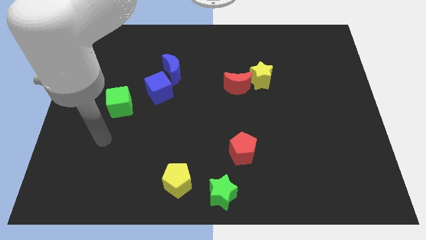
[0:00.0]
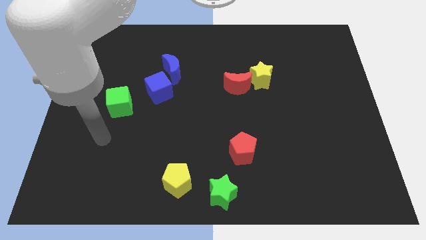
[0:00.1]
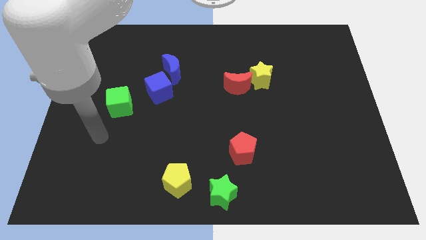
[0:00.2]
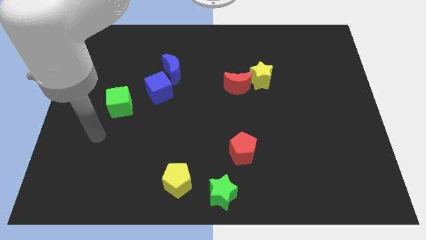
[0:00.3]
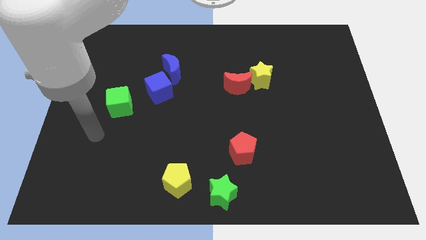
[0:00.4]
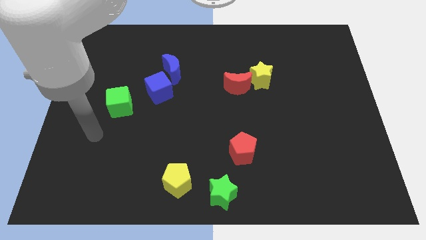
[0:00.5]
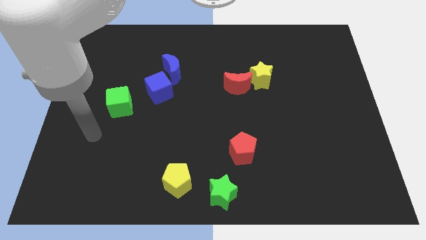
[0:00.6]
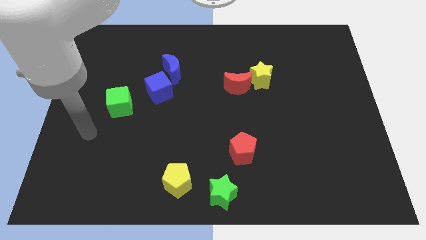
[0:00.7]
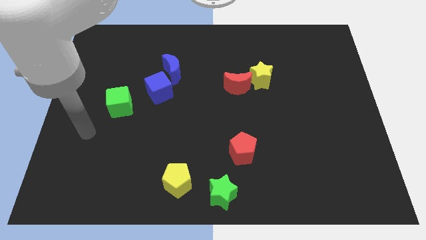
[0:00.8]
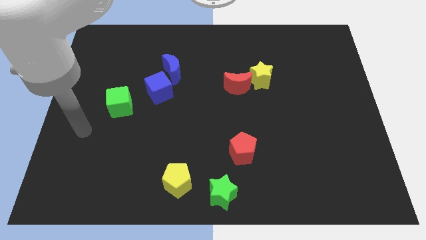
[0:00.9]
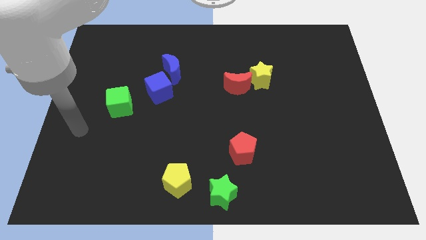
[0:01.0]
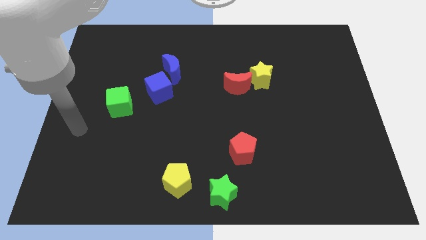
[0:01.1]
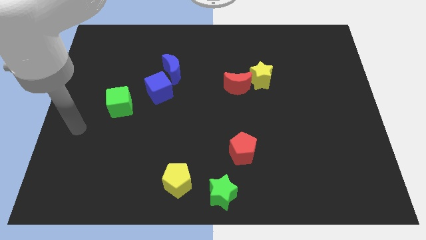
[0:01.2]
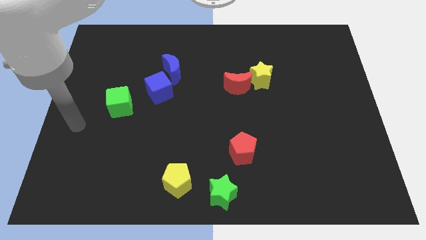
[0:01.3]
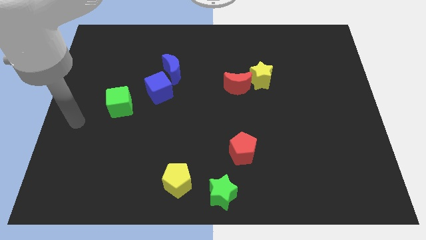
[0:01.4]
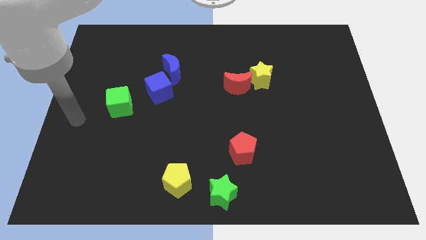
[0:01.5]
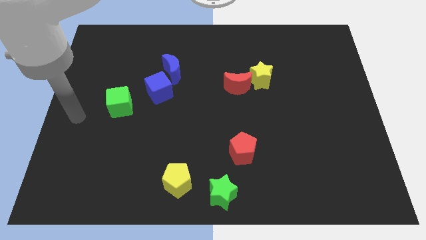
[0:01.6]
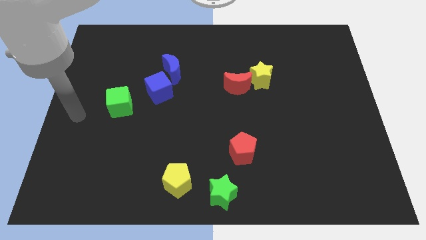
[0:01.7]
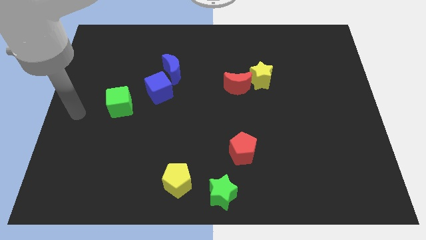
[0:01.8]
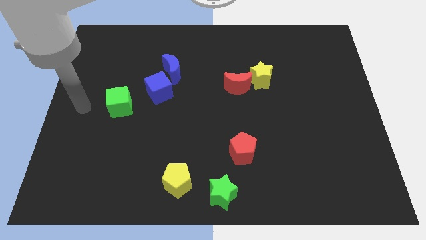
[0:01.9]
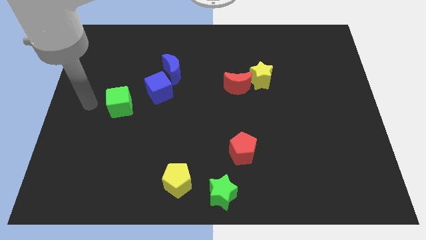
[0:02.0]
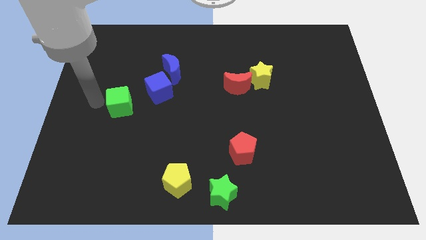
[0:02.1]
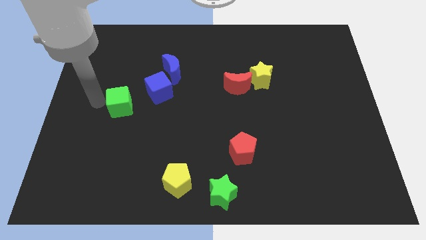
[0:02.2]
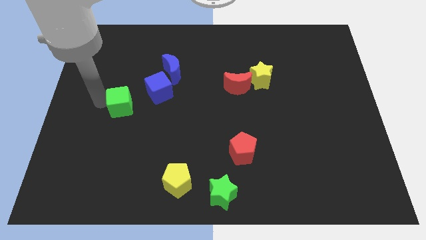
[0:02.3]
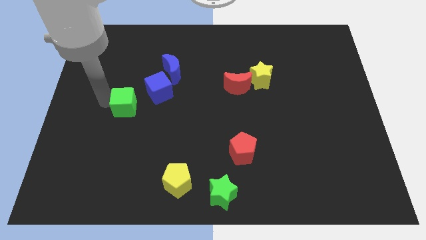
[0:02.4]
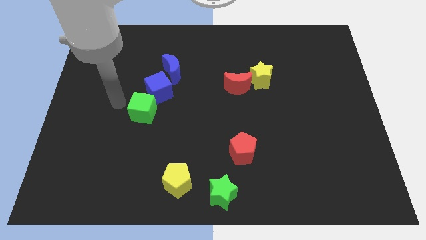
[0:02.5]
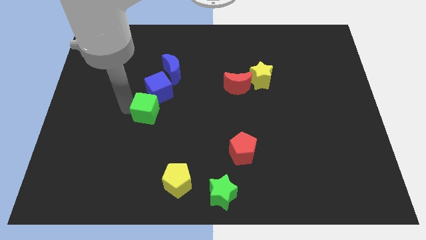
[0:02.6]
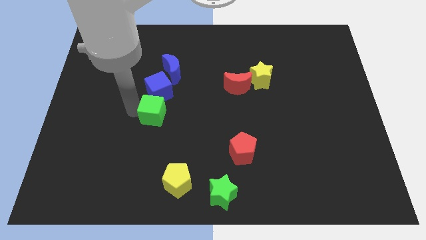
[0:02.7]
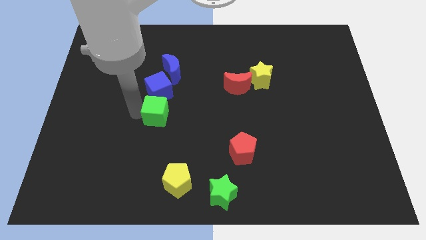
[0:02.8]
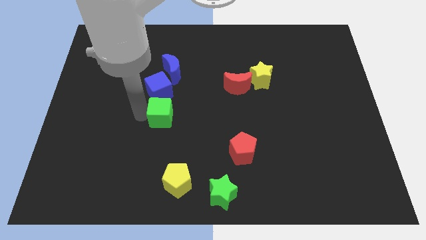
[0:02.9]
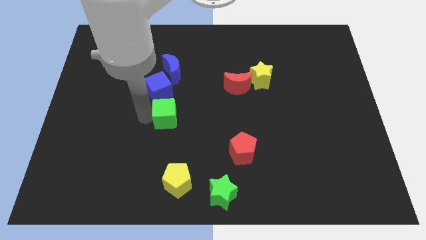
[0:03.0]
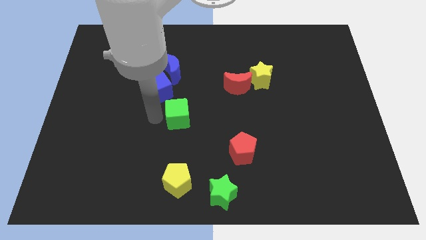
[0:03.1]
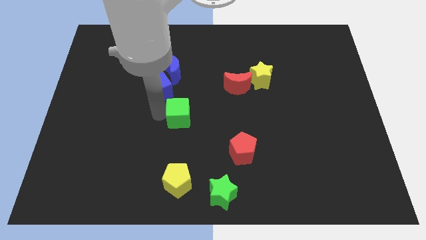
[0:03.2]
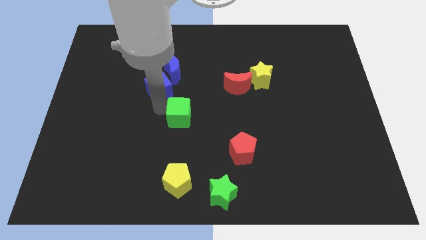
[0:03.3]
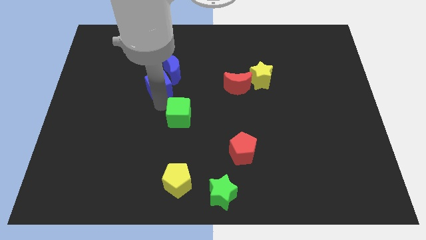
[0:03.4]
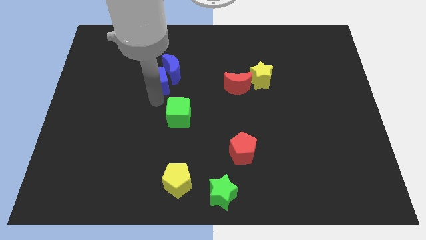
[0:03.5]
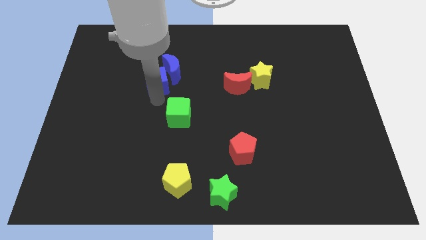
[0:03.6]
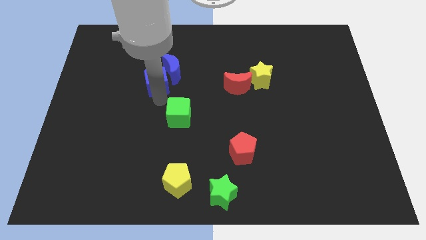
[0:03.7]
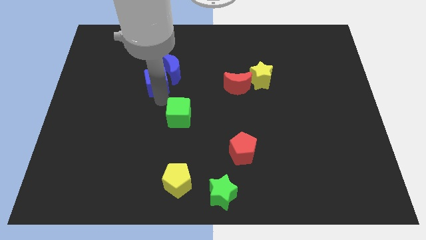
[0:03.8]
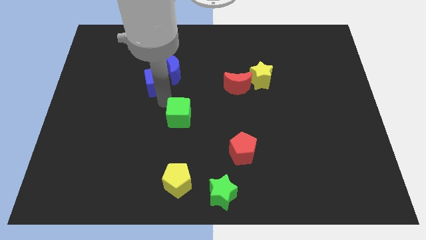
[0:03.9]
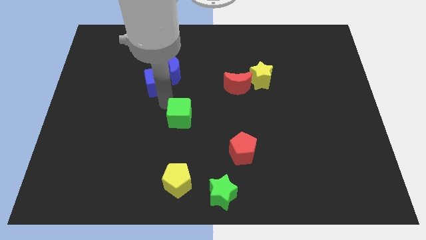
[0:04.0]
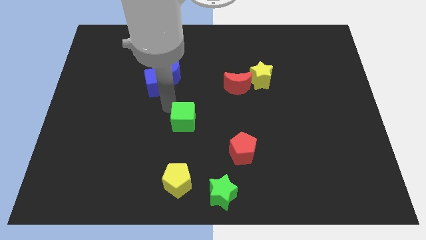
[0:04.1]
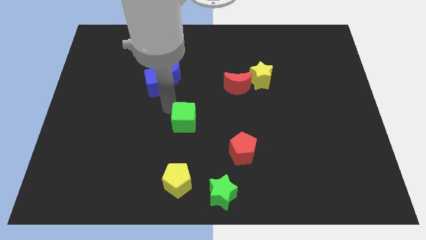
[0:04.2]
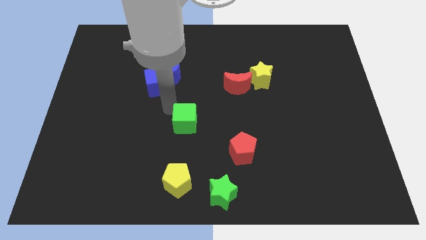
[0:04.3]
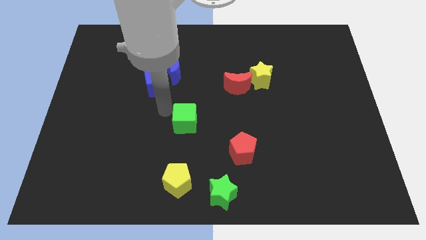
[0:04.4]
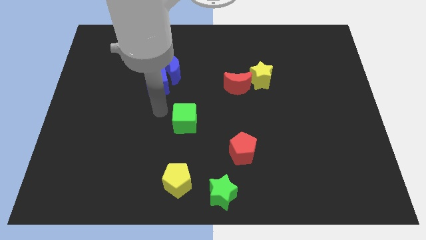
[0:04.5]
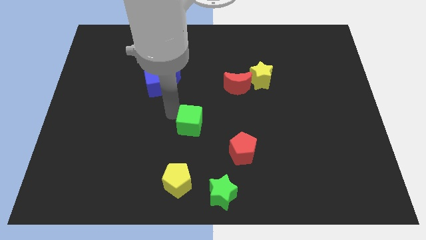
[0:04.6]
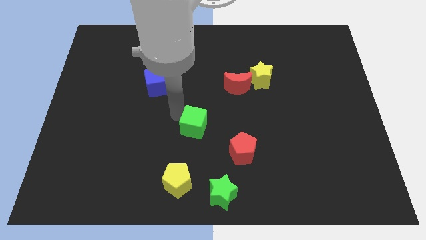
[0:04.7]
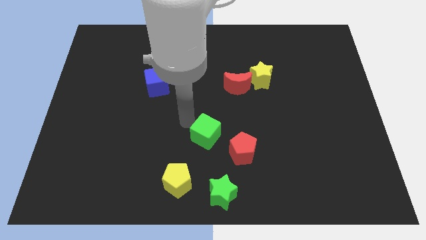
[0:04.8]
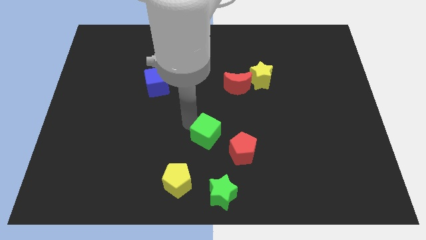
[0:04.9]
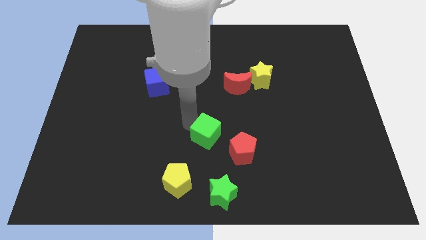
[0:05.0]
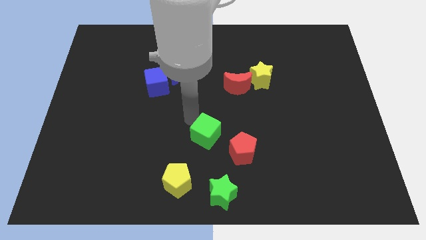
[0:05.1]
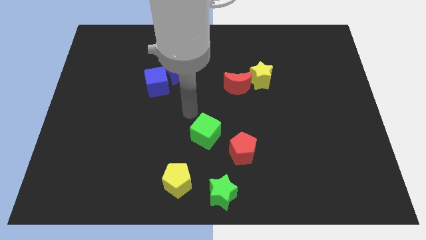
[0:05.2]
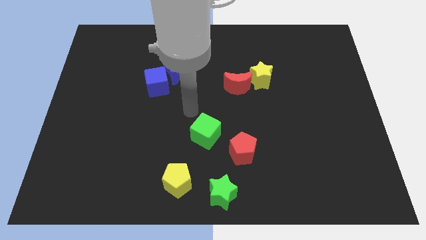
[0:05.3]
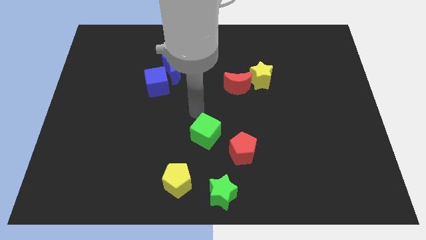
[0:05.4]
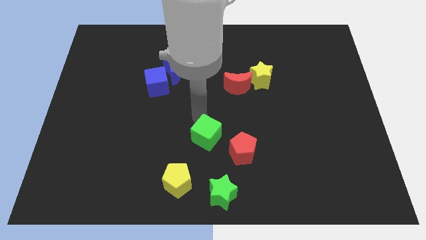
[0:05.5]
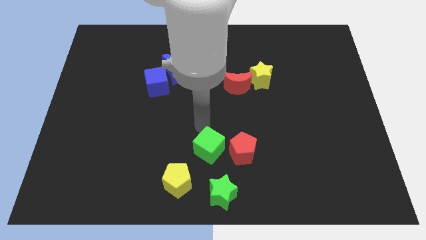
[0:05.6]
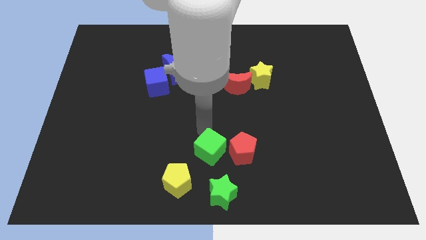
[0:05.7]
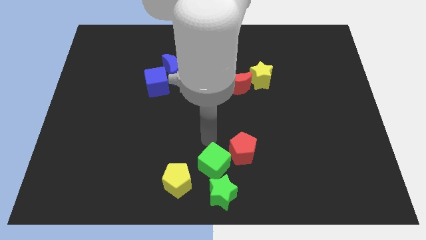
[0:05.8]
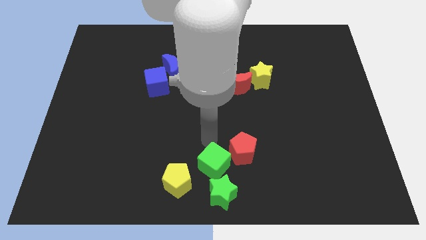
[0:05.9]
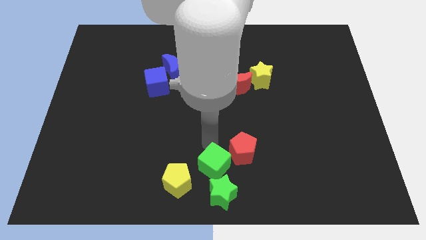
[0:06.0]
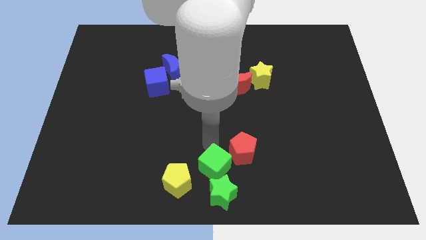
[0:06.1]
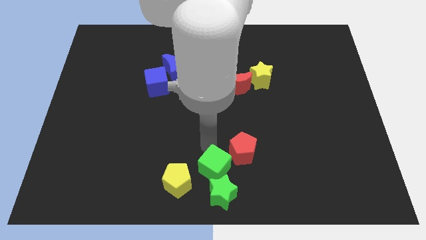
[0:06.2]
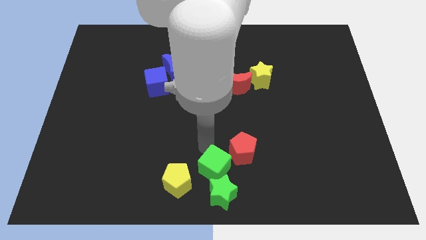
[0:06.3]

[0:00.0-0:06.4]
push the green cube into the green star

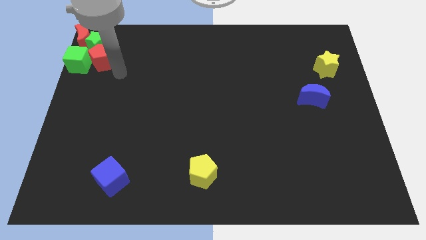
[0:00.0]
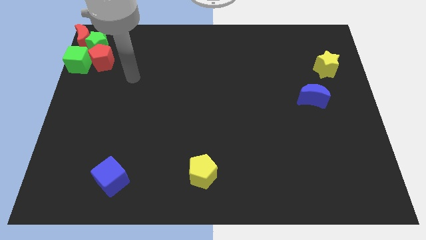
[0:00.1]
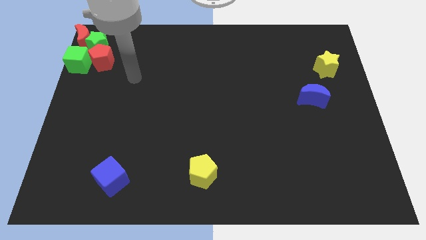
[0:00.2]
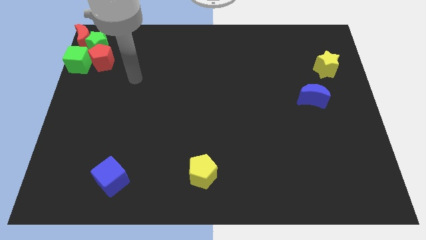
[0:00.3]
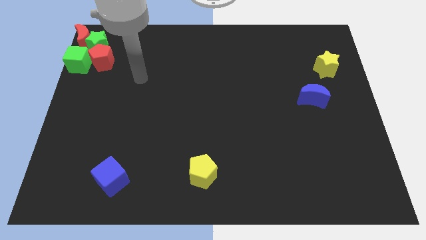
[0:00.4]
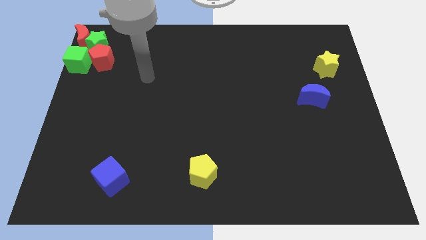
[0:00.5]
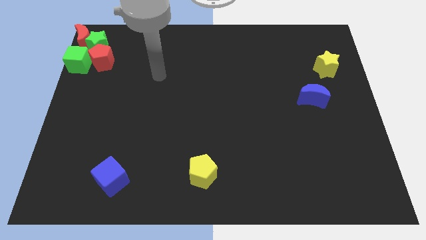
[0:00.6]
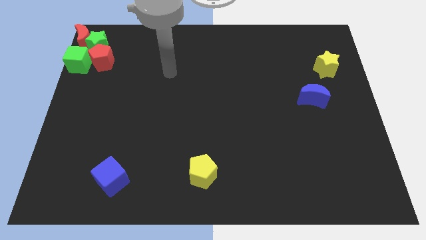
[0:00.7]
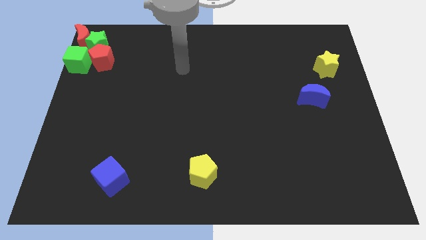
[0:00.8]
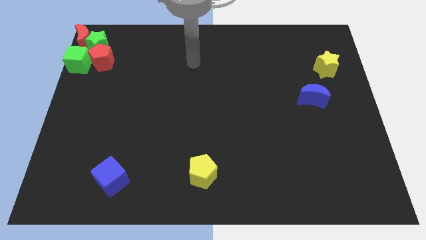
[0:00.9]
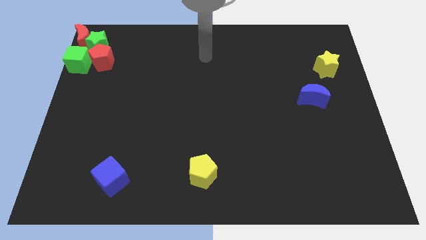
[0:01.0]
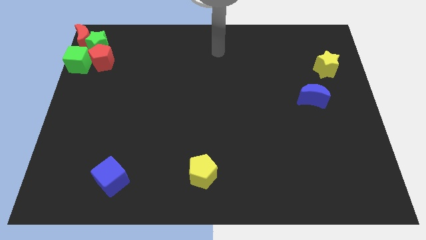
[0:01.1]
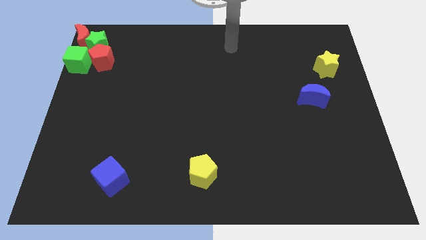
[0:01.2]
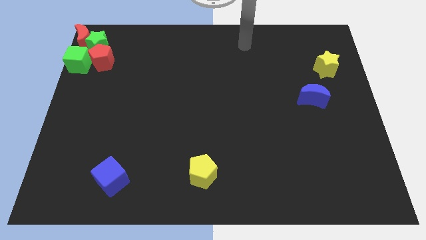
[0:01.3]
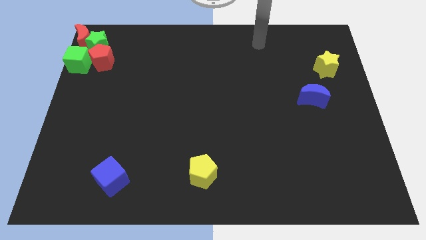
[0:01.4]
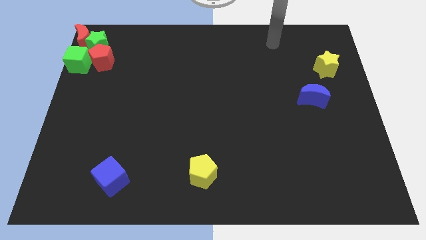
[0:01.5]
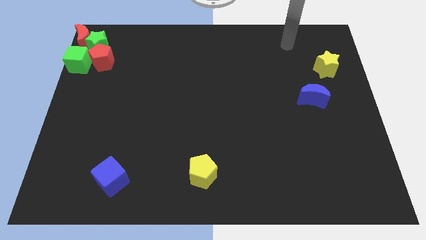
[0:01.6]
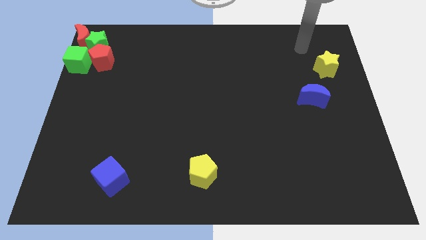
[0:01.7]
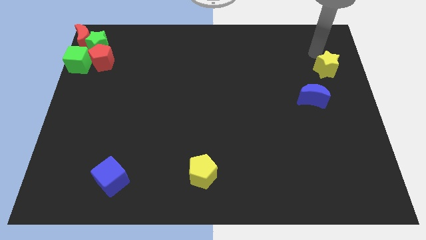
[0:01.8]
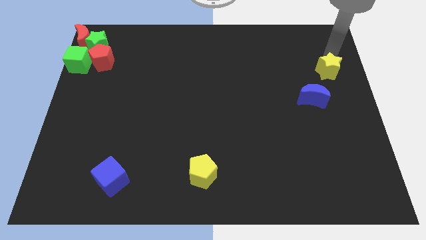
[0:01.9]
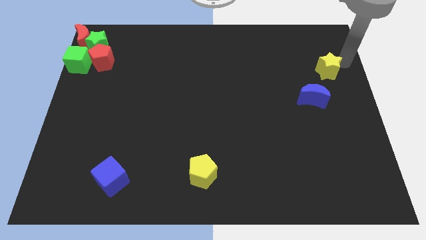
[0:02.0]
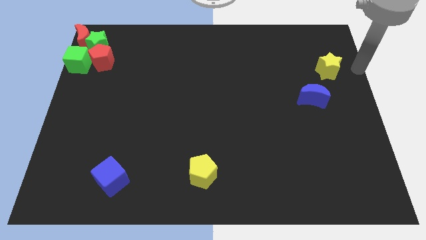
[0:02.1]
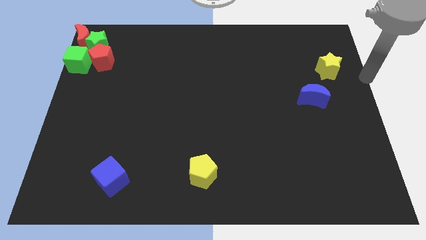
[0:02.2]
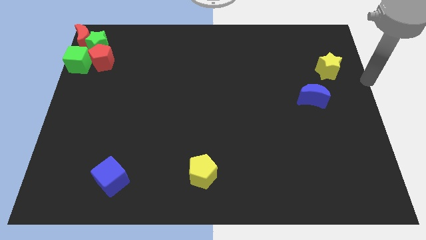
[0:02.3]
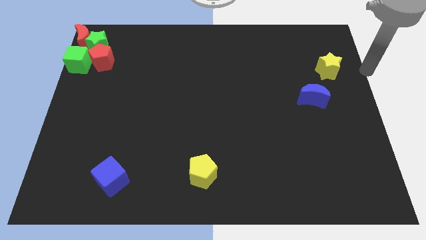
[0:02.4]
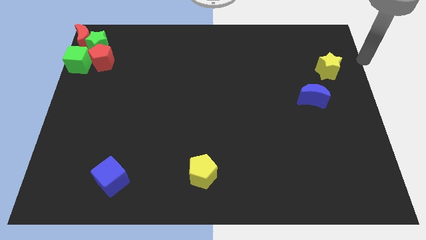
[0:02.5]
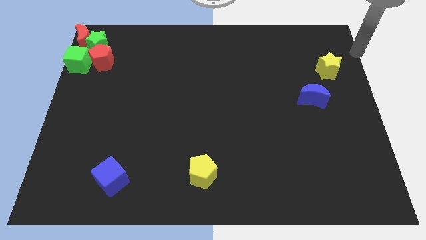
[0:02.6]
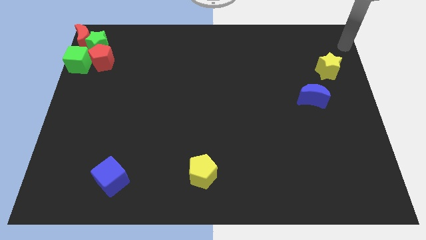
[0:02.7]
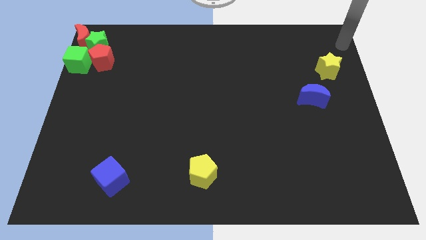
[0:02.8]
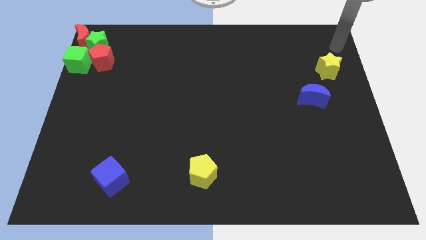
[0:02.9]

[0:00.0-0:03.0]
move your arm diagonal to the top of the yellow star
